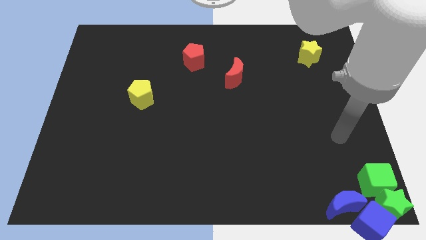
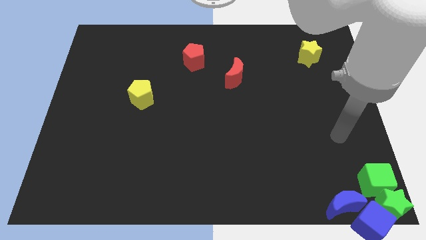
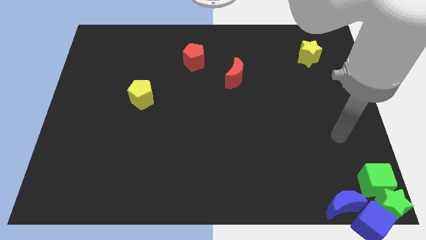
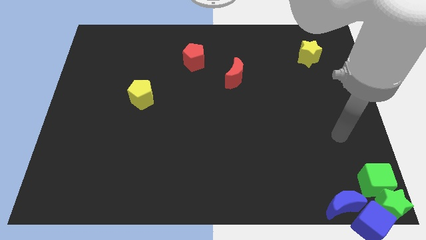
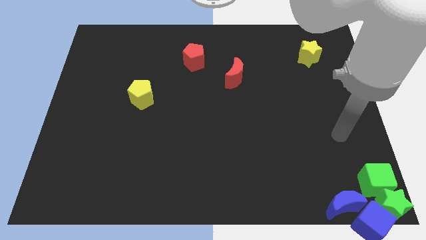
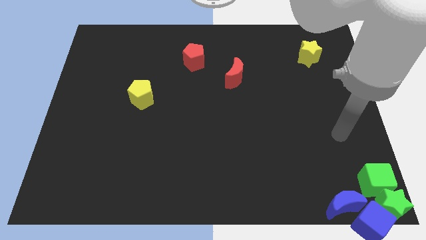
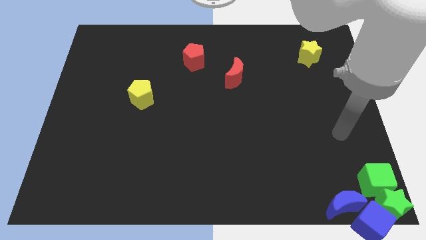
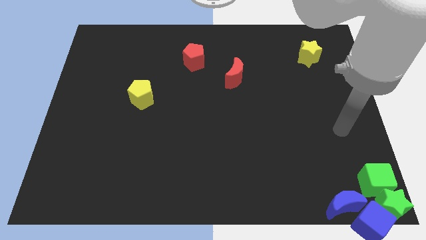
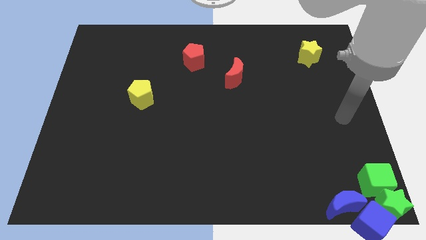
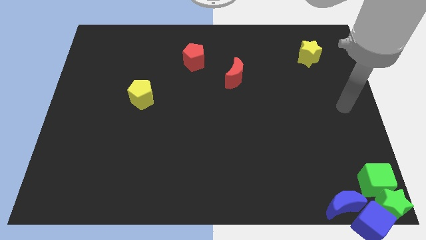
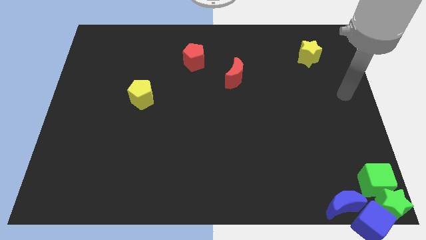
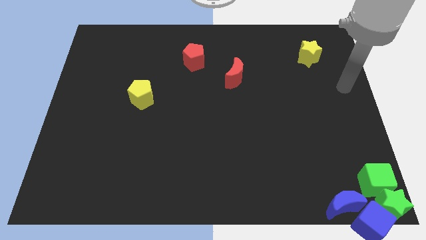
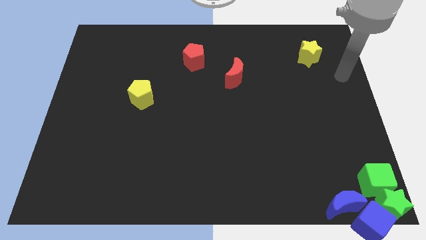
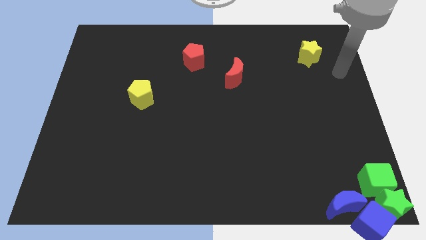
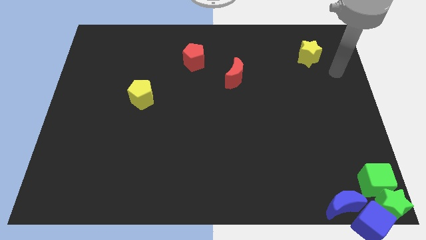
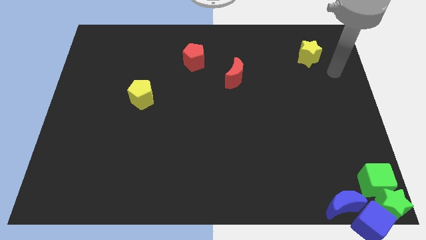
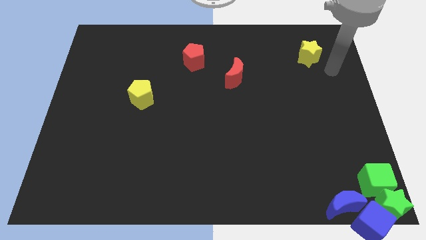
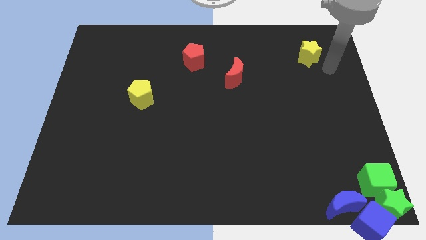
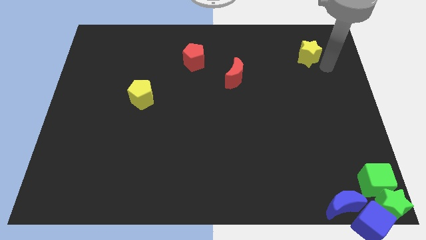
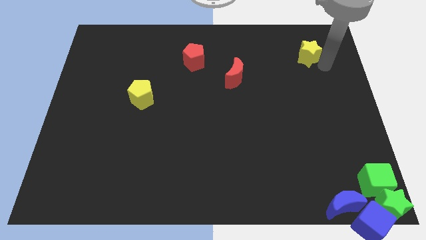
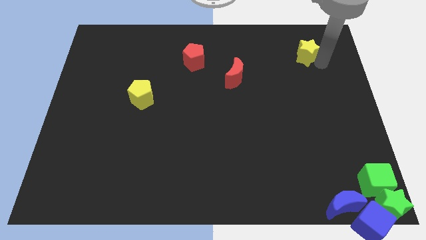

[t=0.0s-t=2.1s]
tap the yellow star

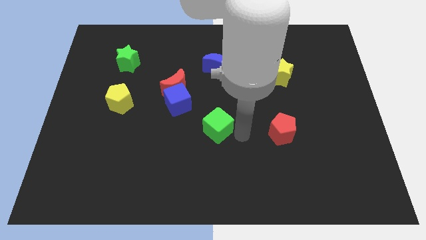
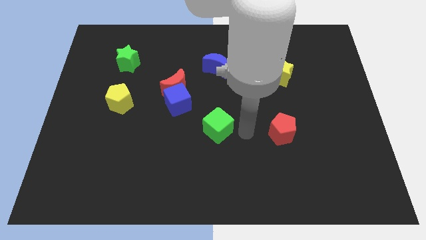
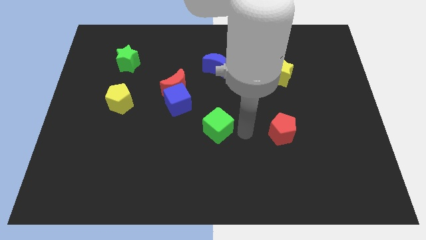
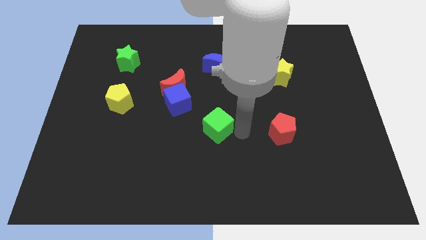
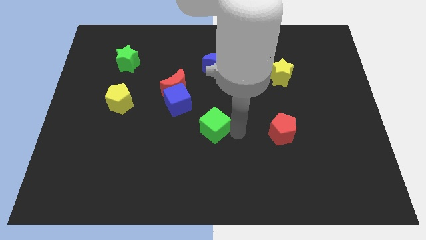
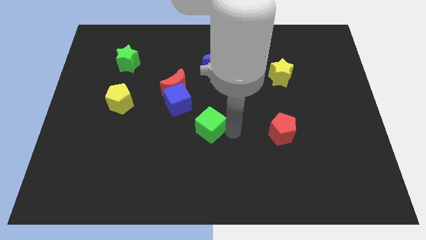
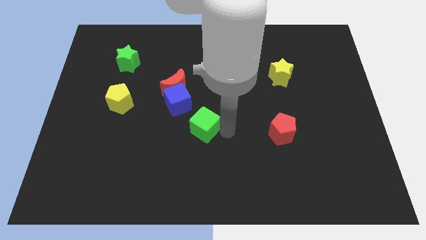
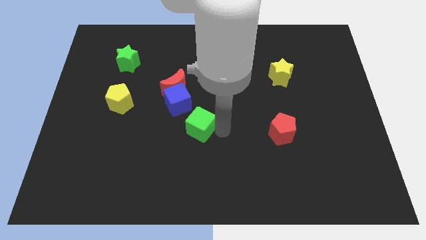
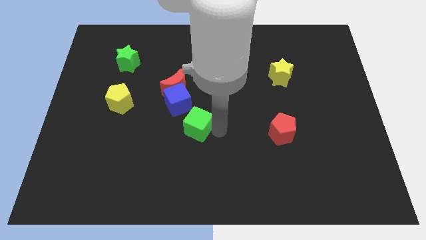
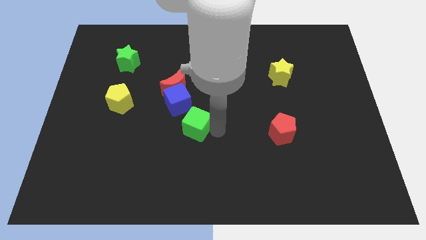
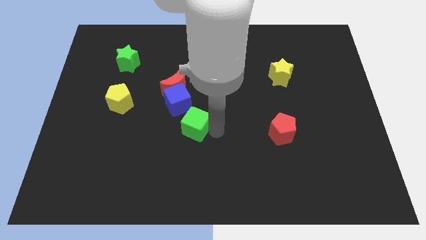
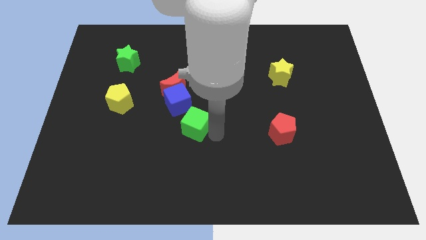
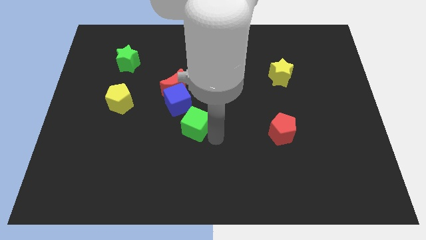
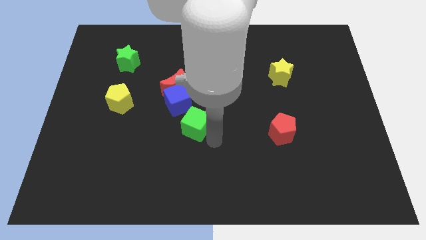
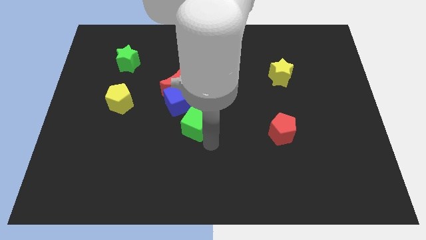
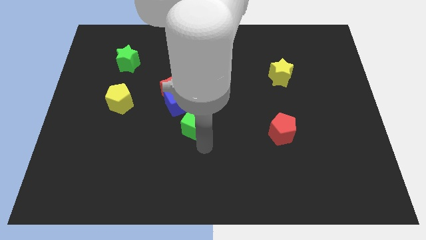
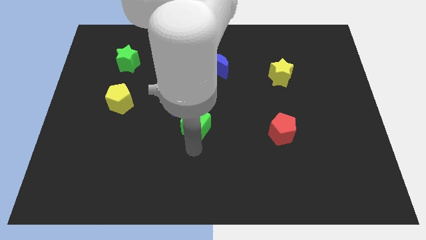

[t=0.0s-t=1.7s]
move the green cube slightly to the left

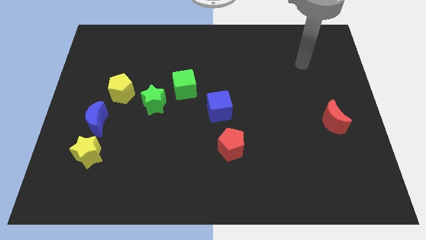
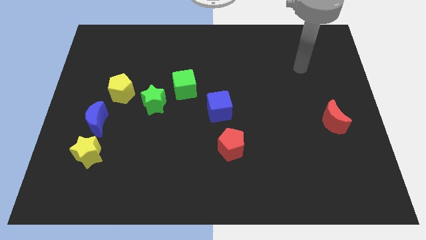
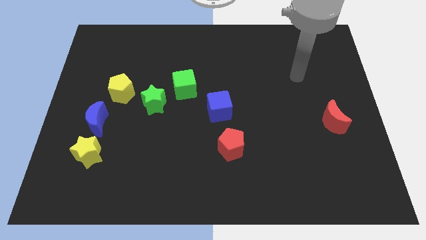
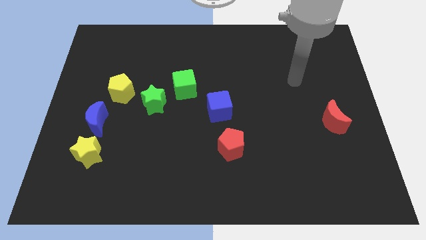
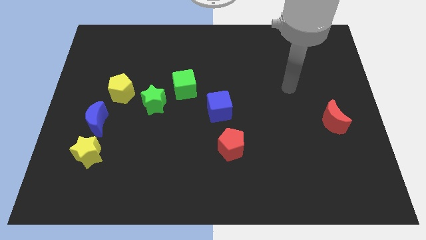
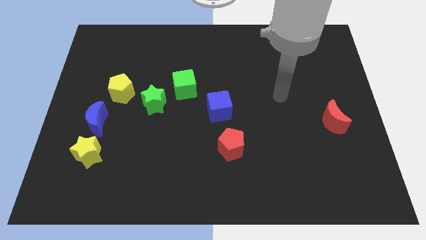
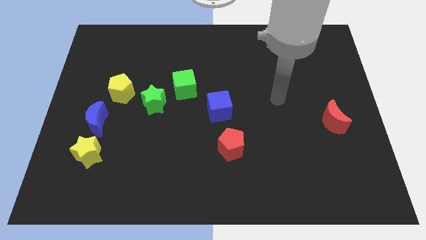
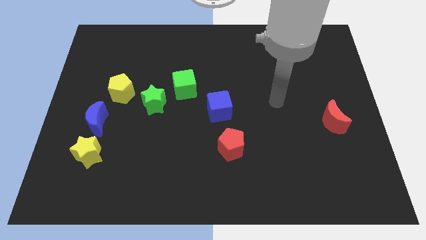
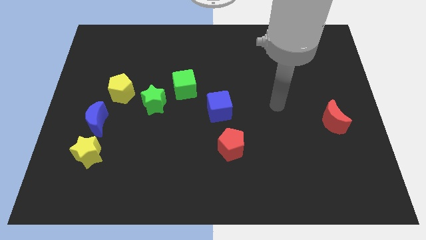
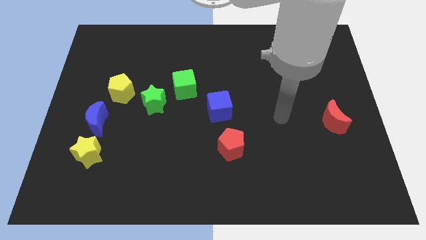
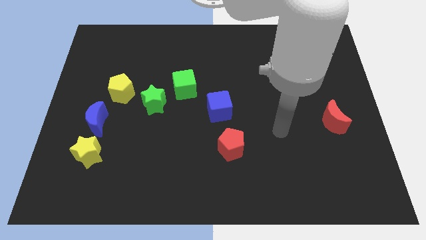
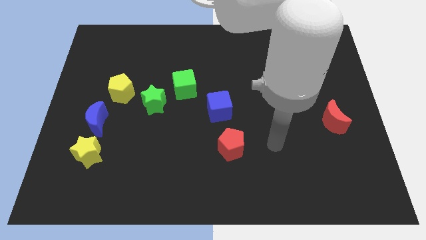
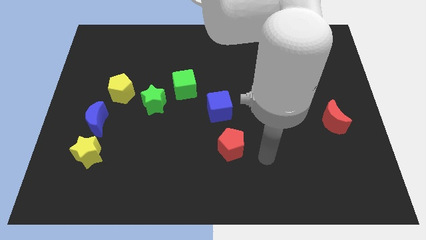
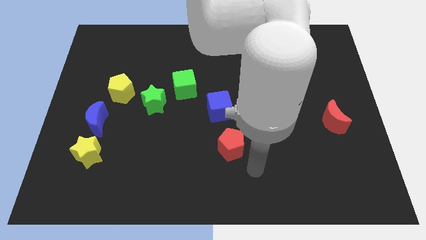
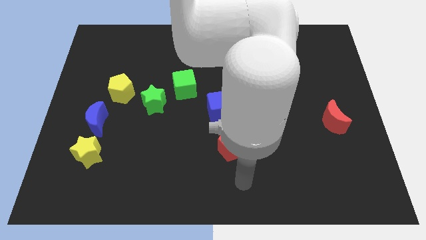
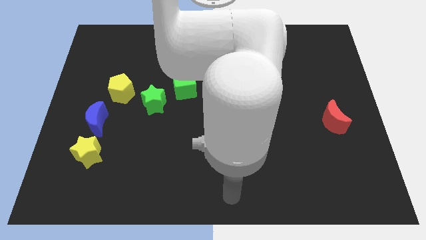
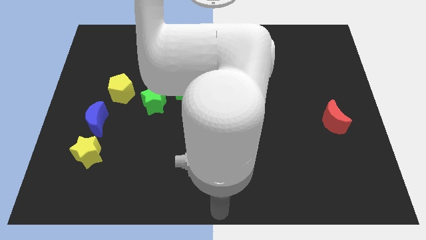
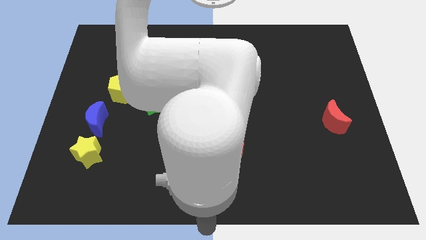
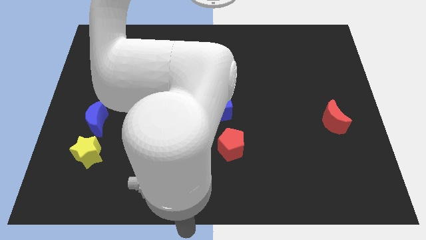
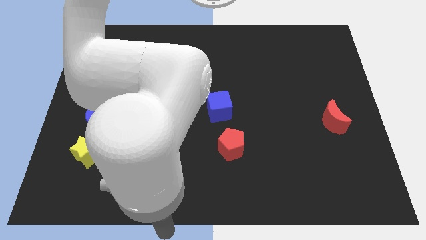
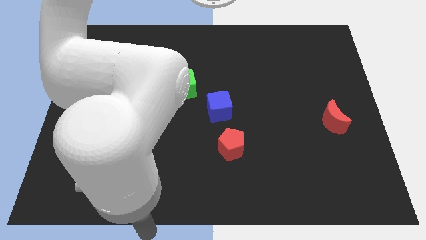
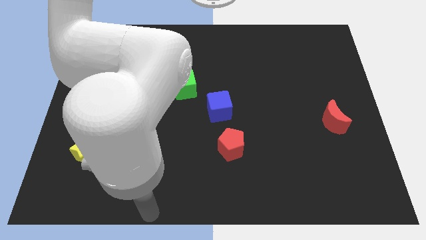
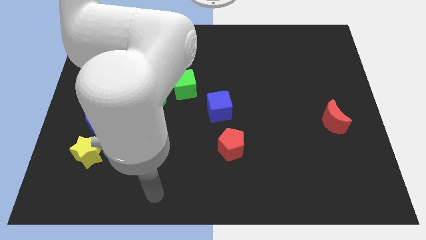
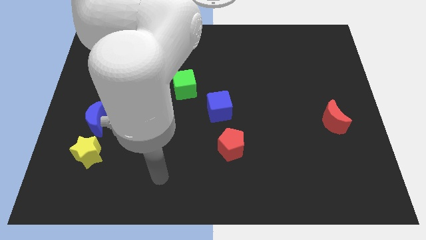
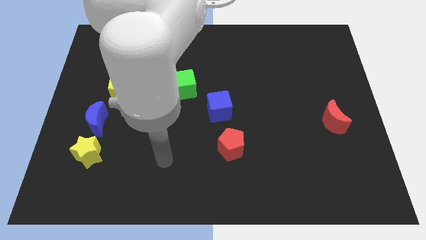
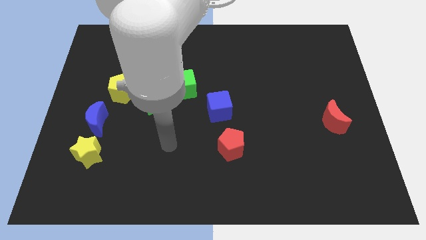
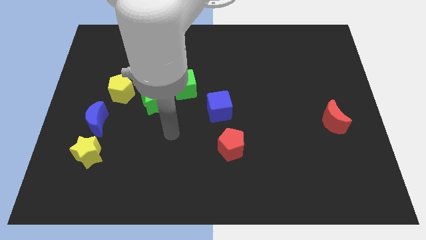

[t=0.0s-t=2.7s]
point your arm at the bottom of the green star

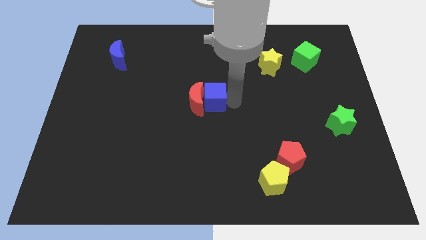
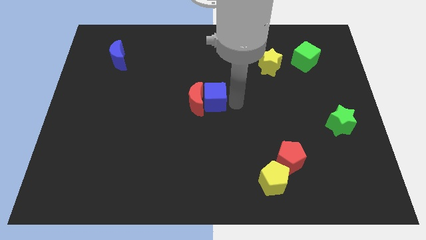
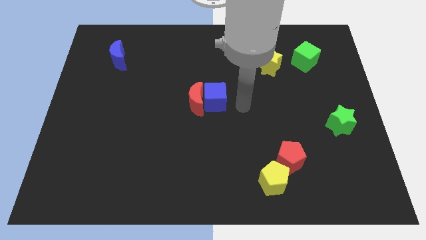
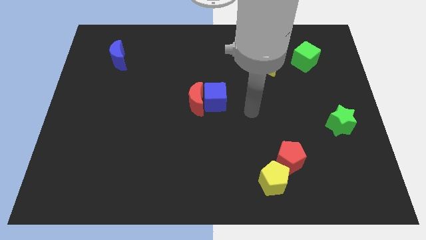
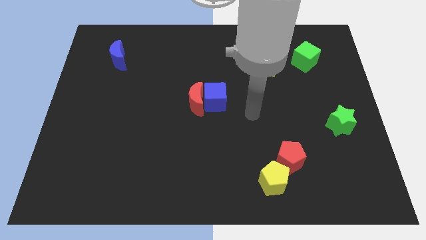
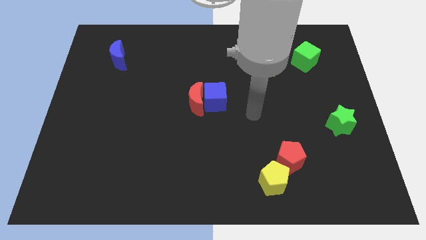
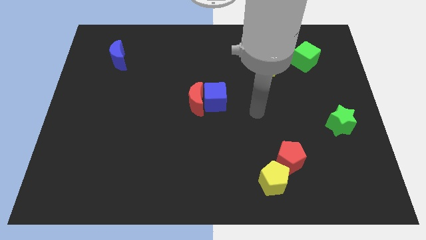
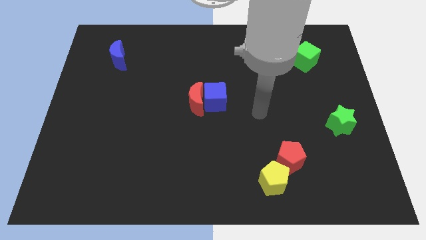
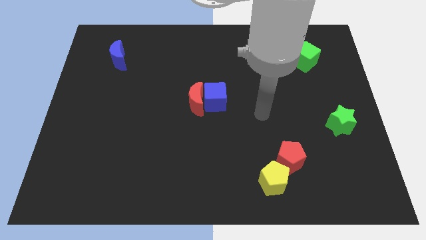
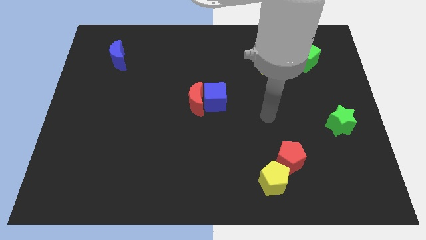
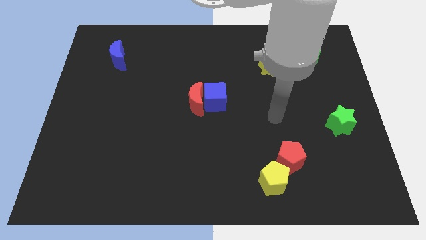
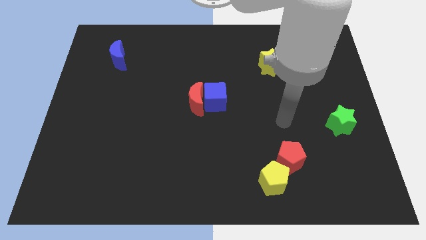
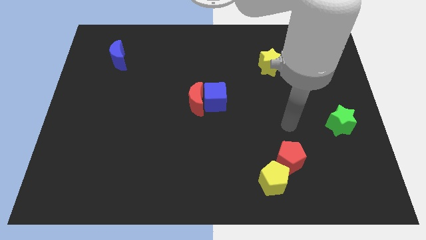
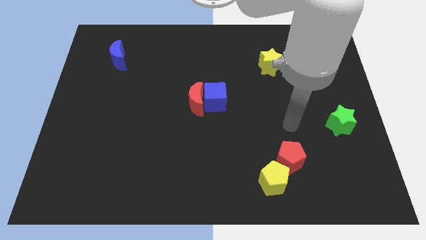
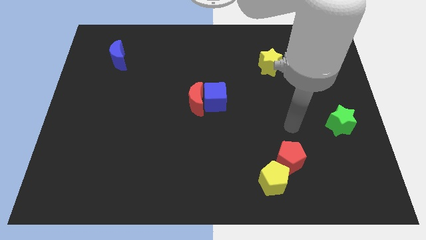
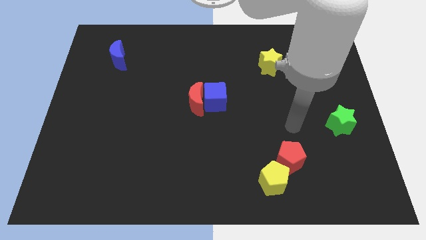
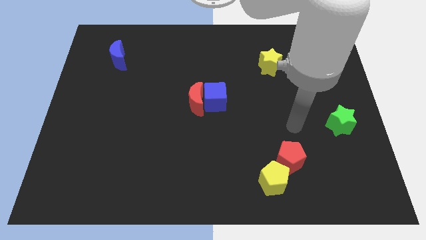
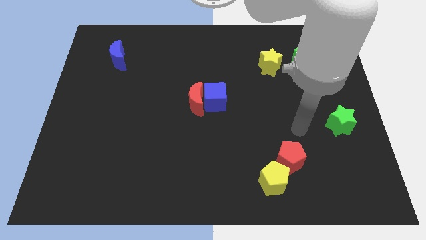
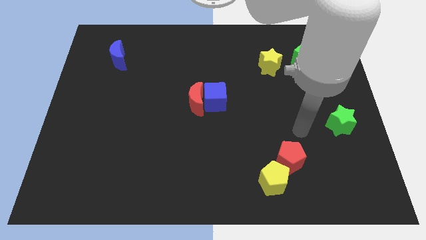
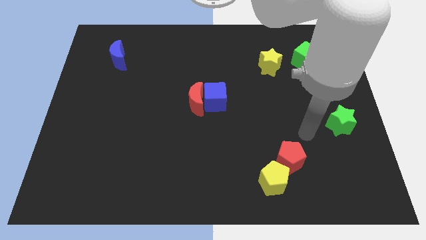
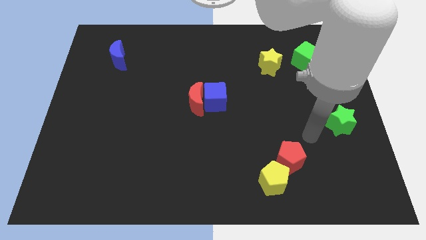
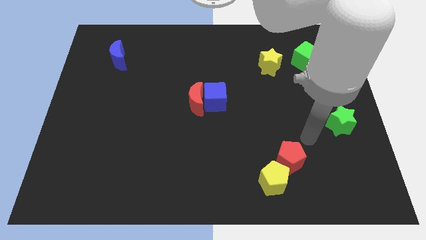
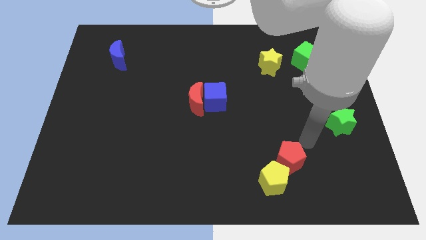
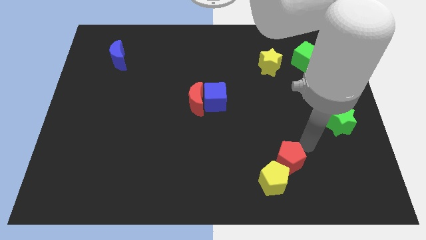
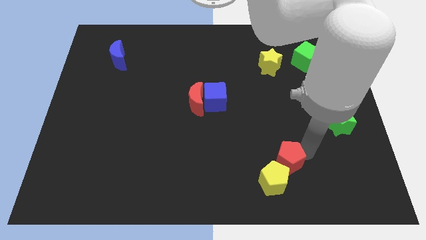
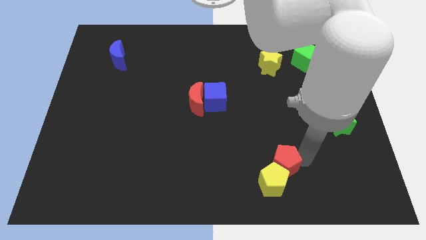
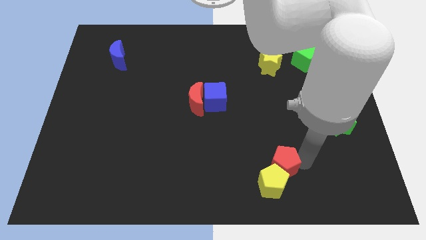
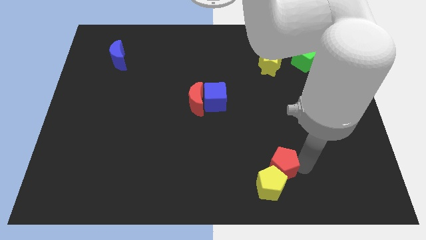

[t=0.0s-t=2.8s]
move the red and yellow pentagons together slightly to the bottom
